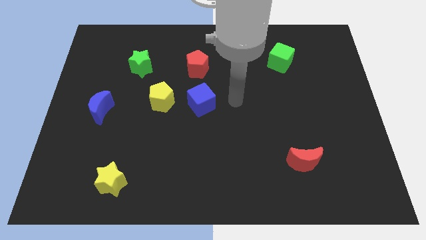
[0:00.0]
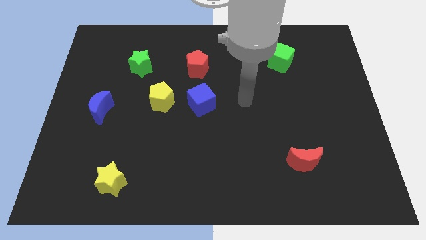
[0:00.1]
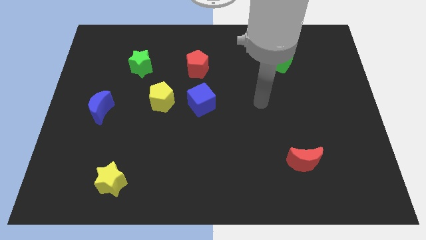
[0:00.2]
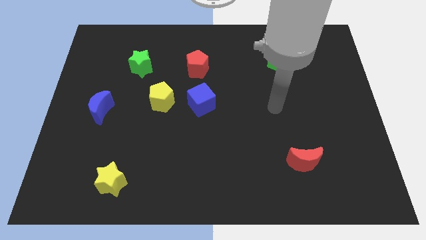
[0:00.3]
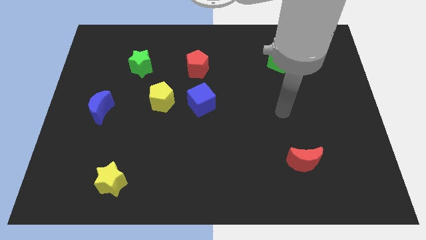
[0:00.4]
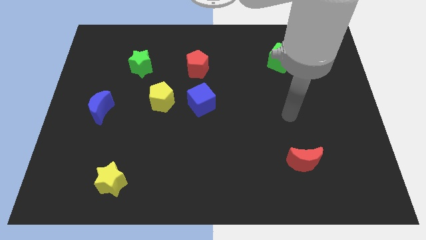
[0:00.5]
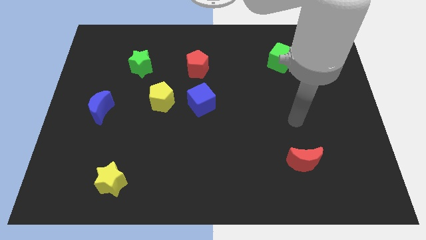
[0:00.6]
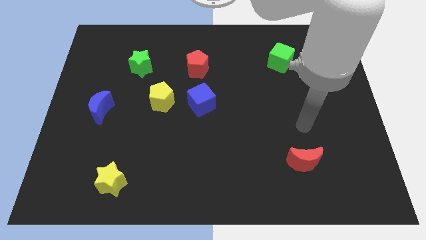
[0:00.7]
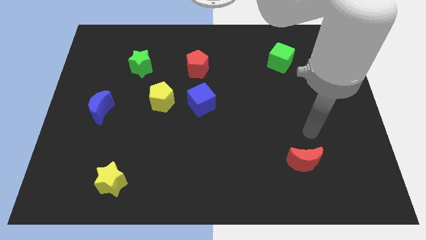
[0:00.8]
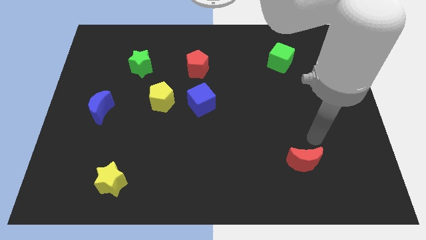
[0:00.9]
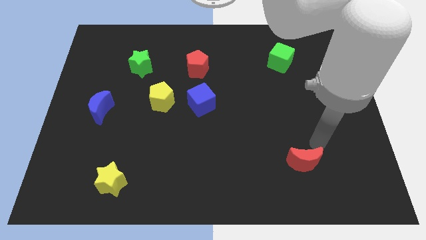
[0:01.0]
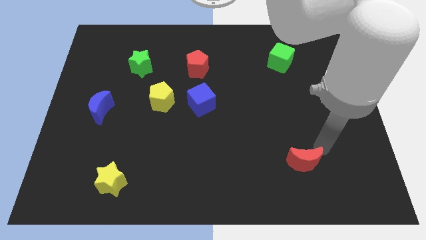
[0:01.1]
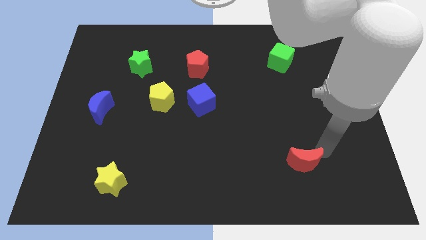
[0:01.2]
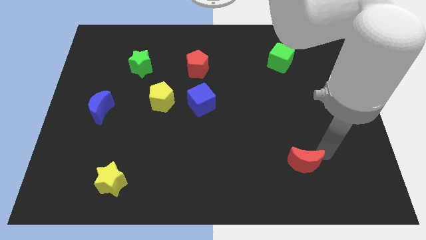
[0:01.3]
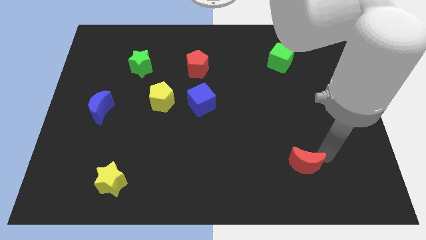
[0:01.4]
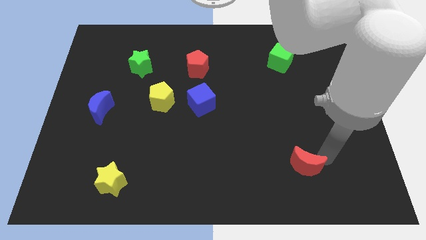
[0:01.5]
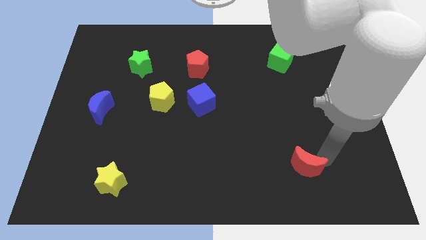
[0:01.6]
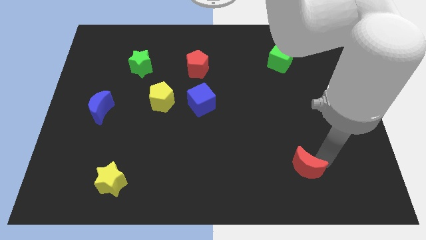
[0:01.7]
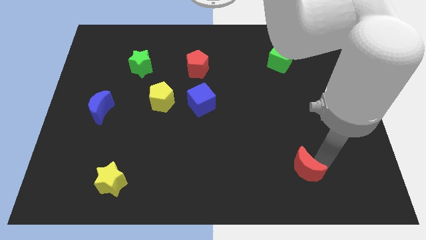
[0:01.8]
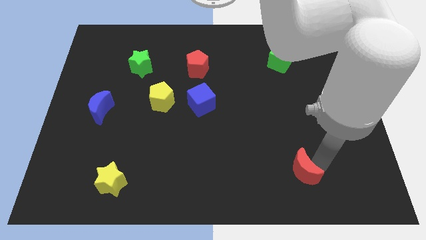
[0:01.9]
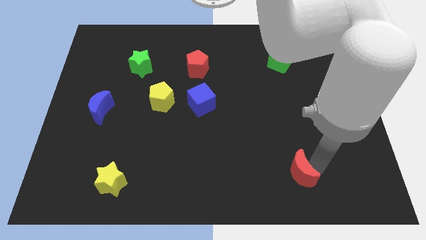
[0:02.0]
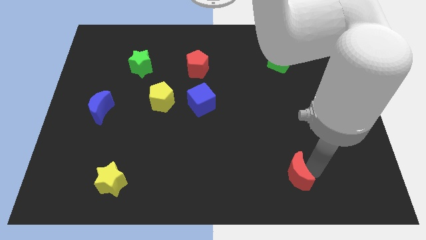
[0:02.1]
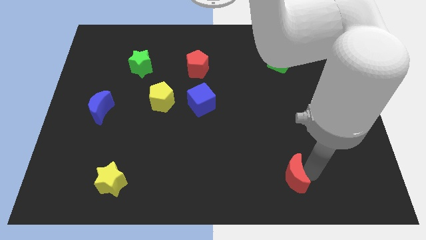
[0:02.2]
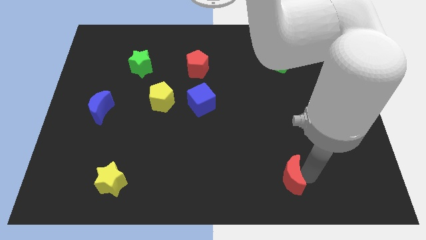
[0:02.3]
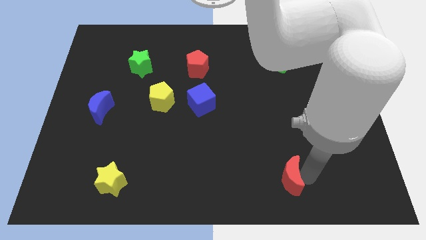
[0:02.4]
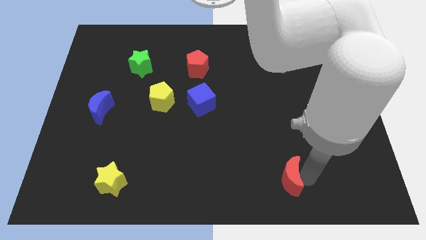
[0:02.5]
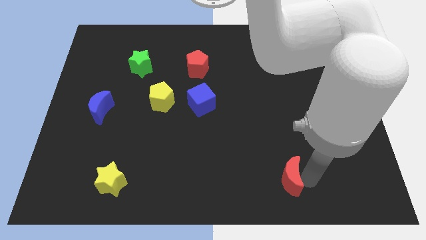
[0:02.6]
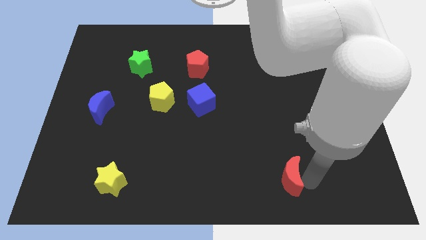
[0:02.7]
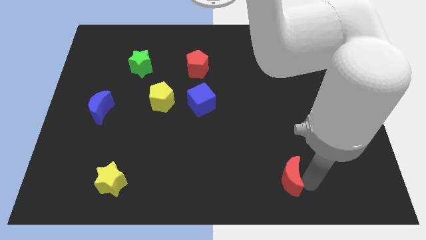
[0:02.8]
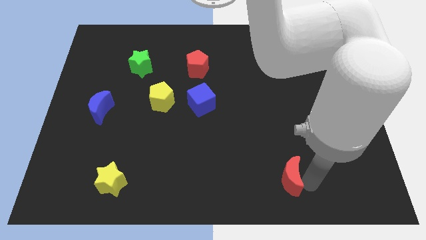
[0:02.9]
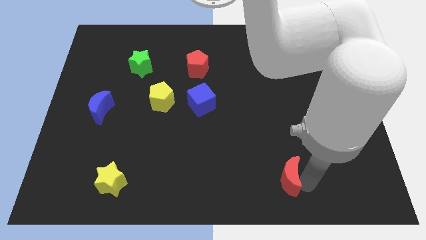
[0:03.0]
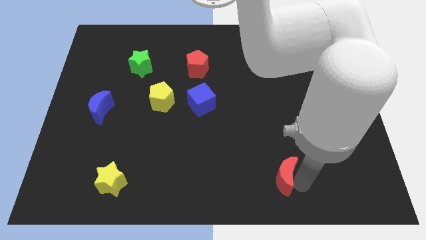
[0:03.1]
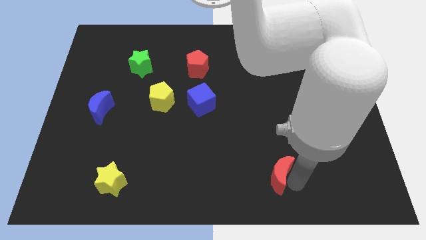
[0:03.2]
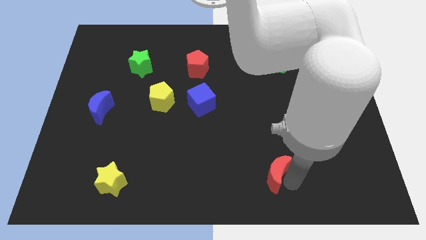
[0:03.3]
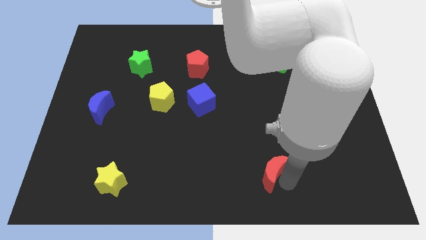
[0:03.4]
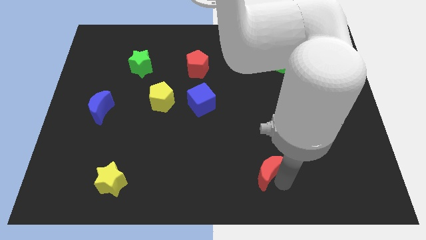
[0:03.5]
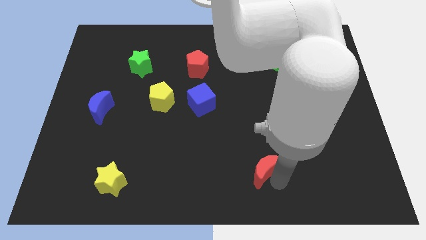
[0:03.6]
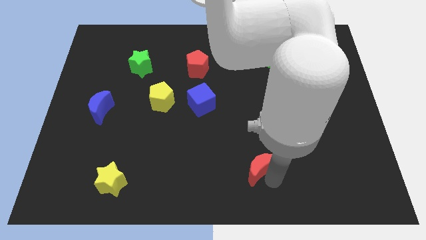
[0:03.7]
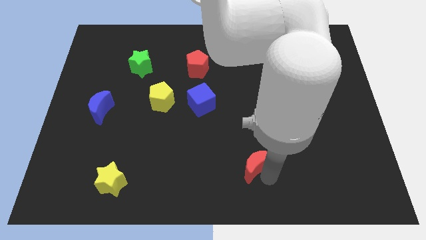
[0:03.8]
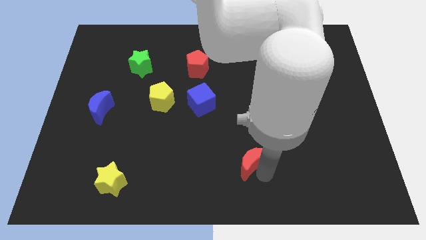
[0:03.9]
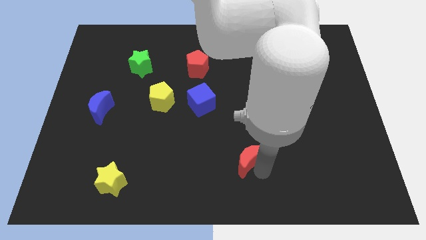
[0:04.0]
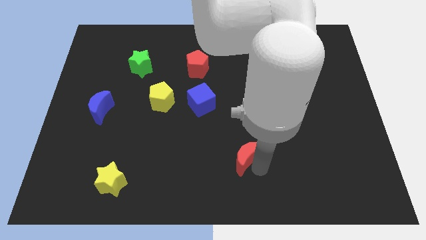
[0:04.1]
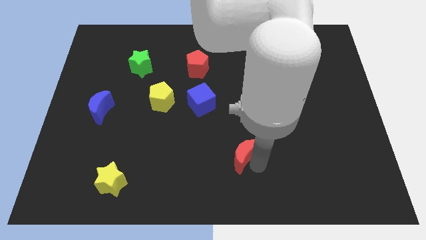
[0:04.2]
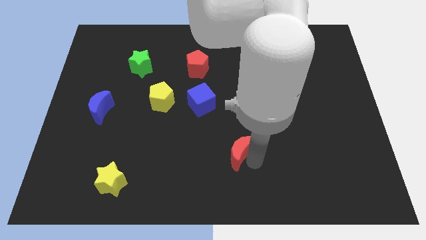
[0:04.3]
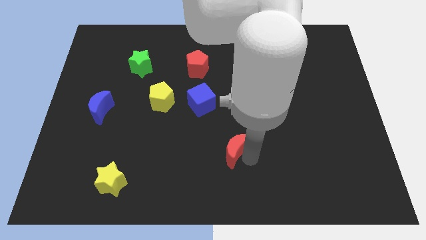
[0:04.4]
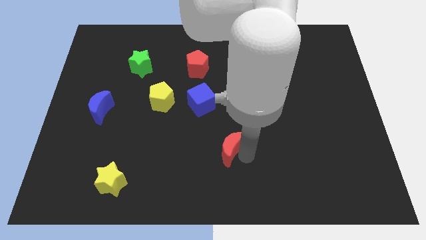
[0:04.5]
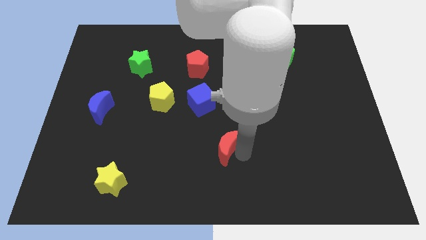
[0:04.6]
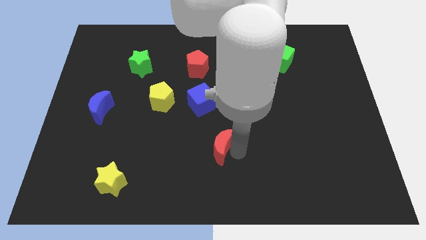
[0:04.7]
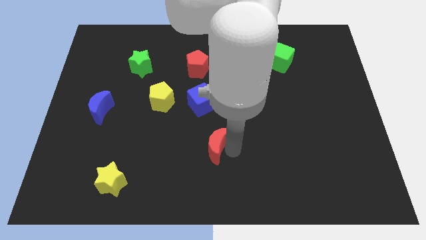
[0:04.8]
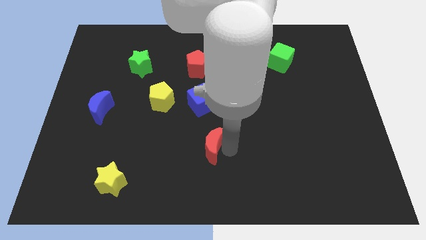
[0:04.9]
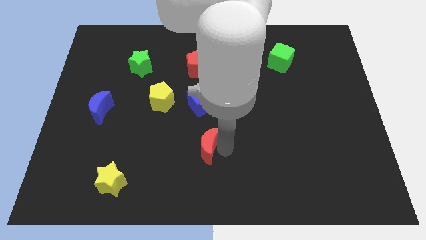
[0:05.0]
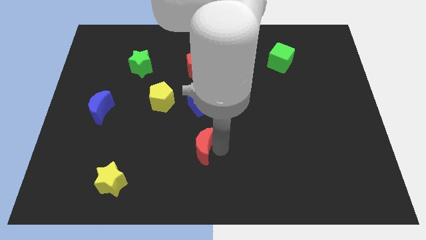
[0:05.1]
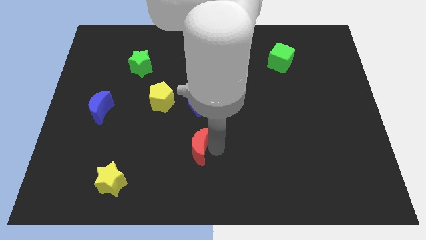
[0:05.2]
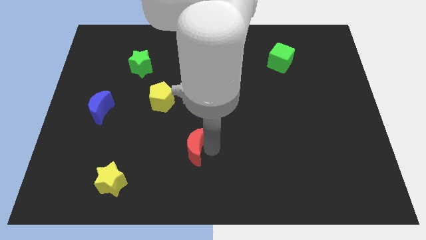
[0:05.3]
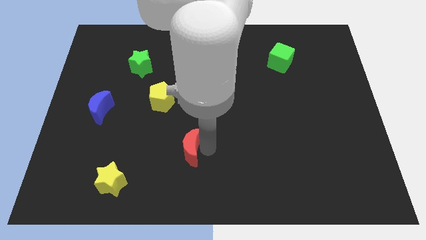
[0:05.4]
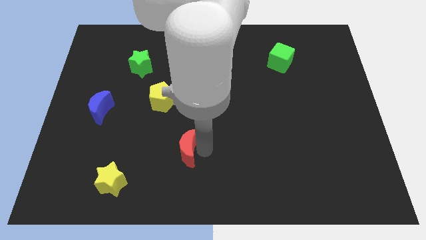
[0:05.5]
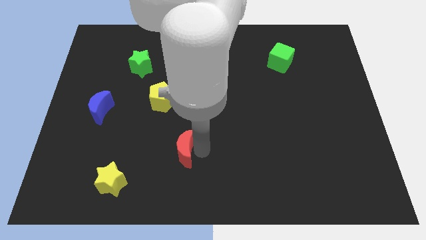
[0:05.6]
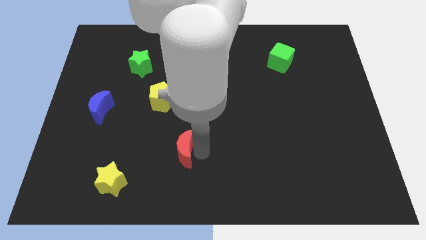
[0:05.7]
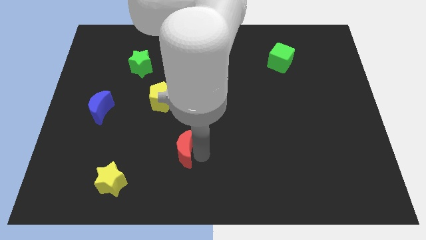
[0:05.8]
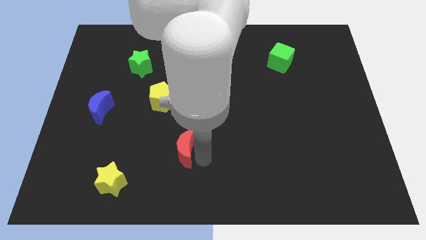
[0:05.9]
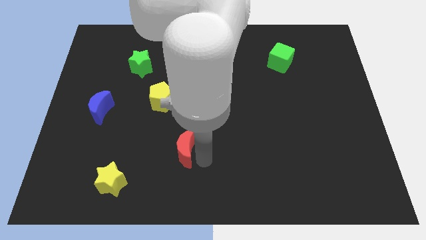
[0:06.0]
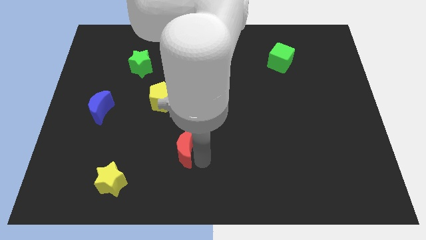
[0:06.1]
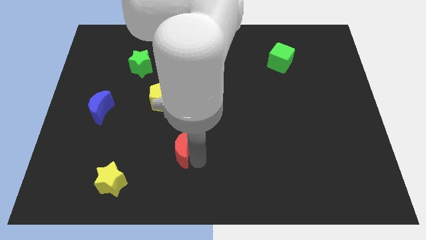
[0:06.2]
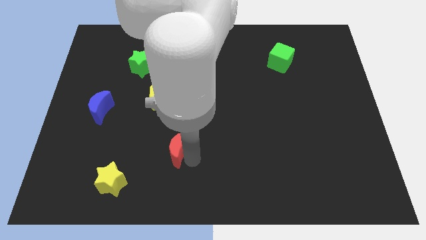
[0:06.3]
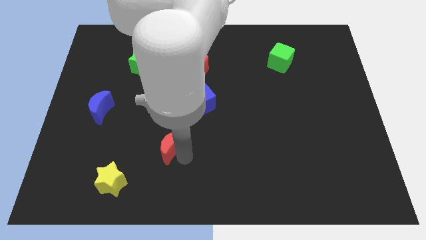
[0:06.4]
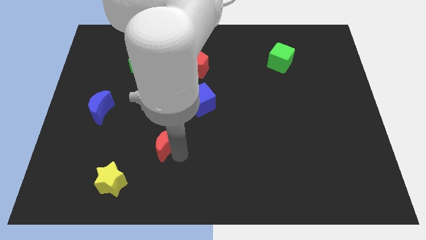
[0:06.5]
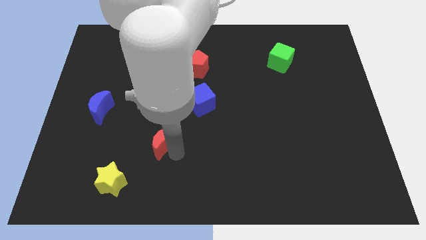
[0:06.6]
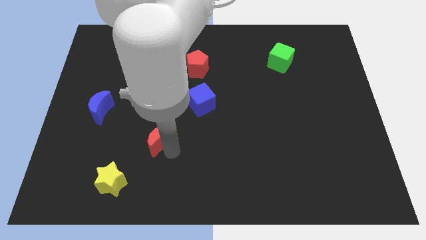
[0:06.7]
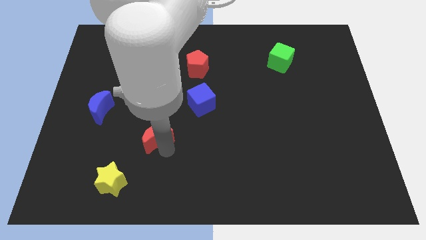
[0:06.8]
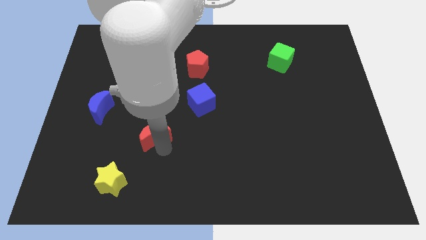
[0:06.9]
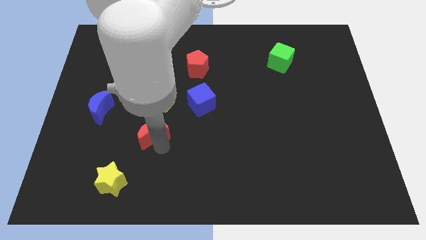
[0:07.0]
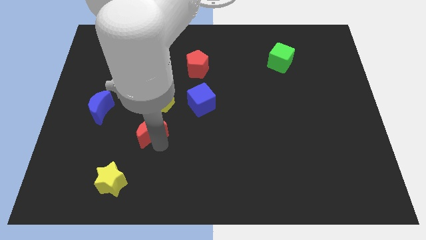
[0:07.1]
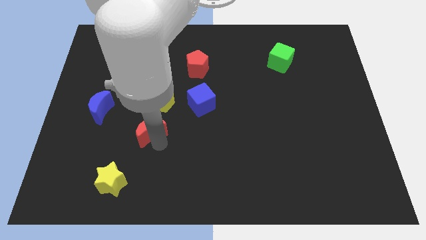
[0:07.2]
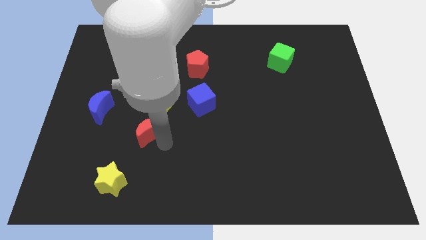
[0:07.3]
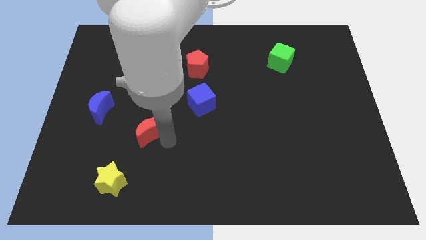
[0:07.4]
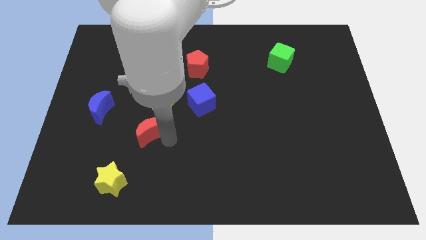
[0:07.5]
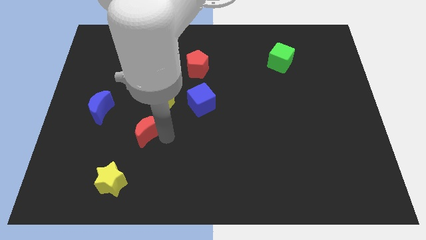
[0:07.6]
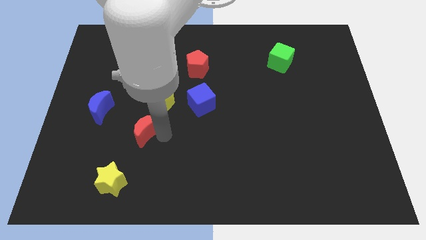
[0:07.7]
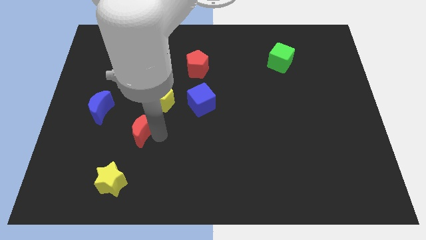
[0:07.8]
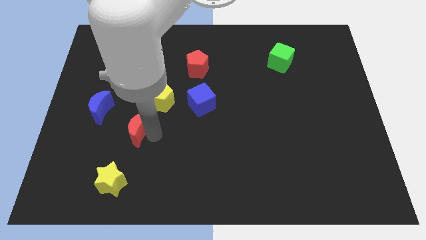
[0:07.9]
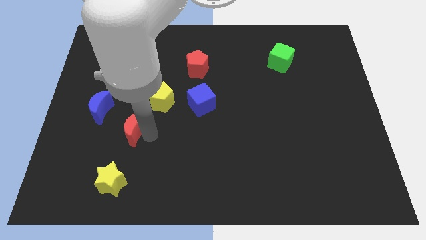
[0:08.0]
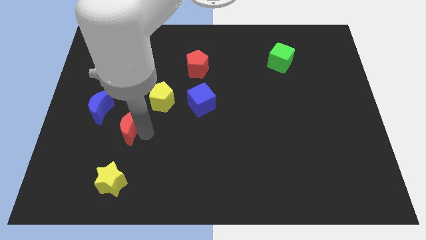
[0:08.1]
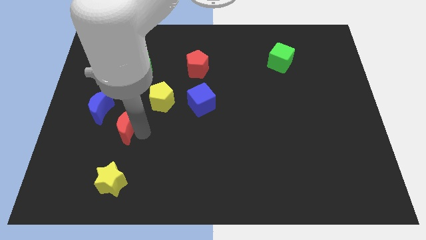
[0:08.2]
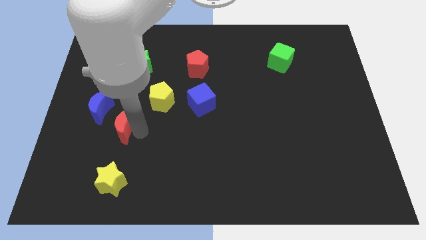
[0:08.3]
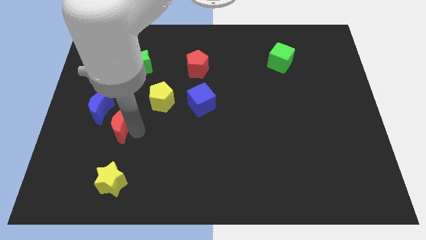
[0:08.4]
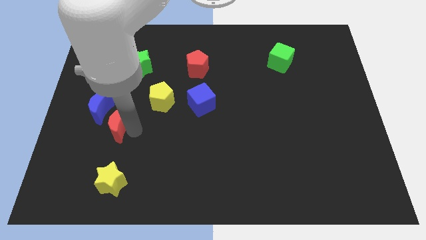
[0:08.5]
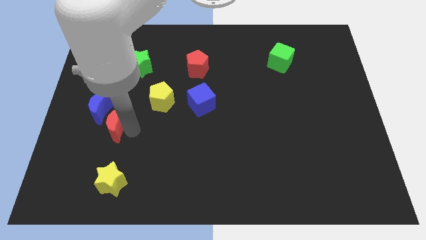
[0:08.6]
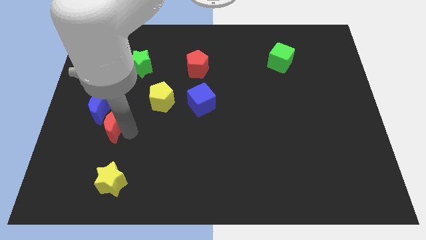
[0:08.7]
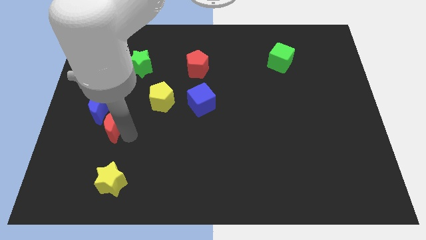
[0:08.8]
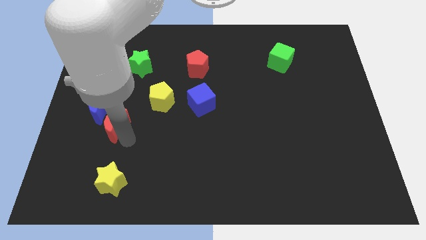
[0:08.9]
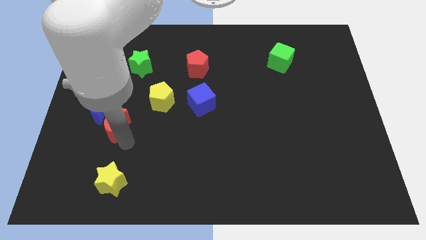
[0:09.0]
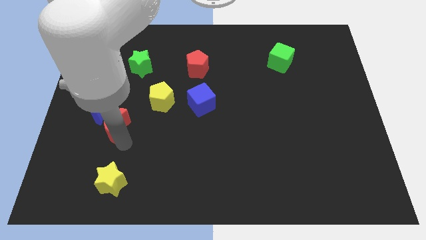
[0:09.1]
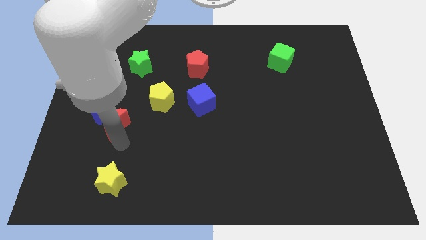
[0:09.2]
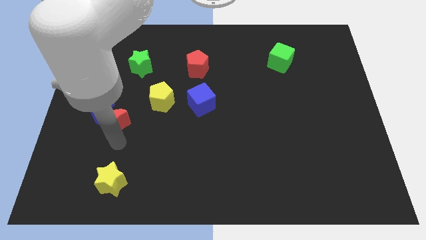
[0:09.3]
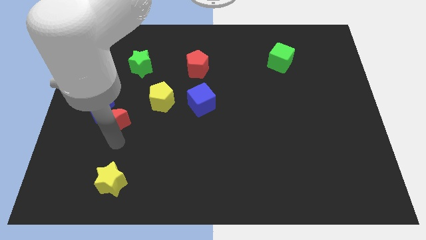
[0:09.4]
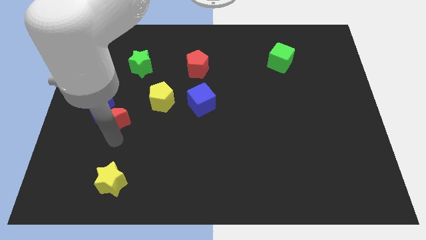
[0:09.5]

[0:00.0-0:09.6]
slide the red moon to the blue moon
